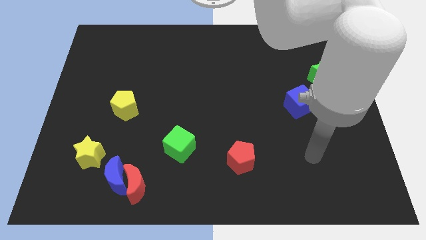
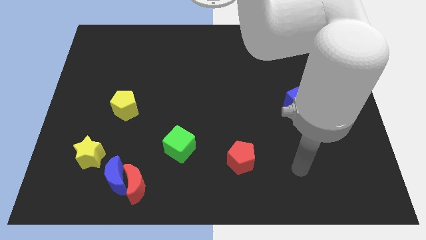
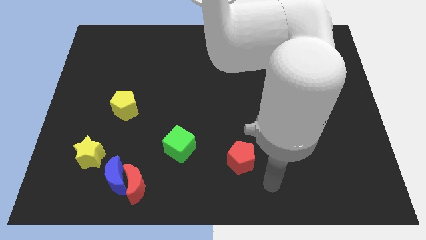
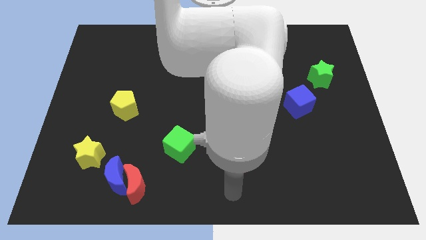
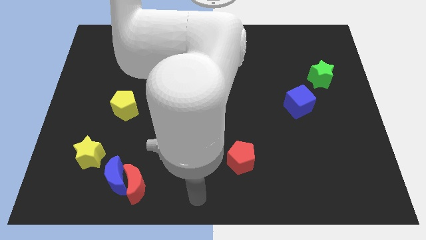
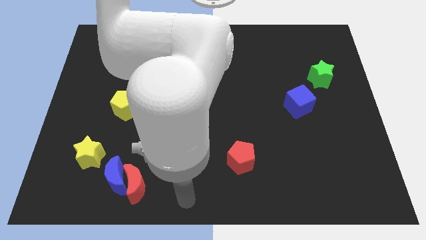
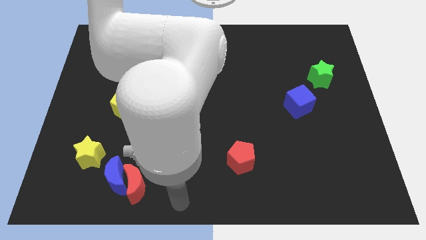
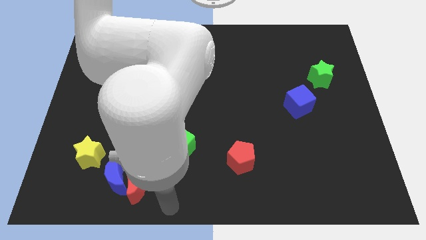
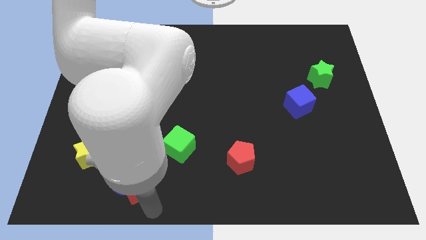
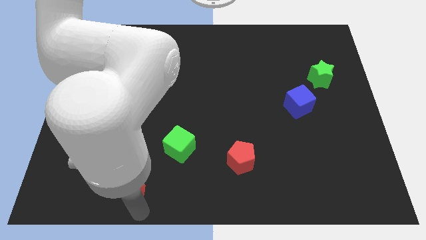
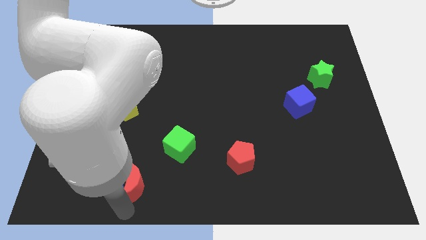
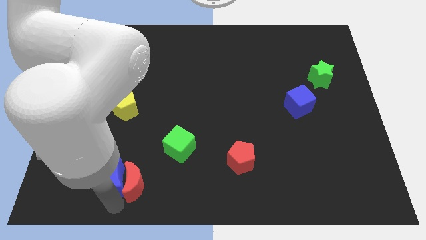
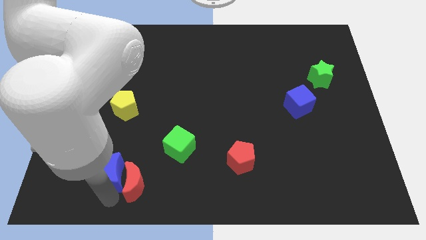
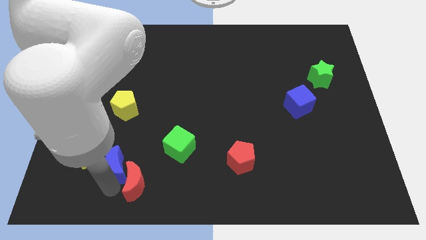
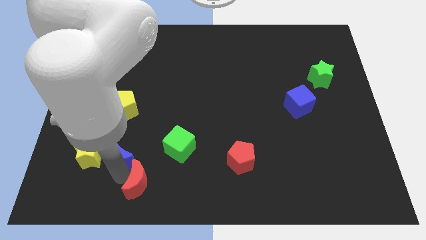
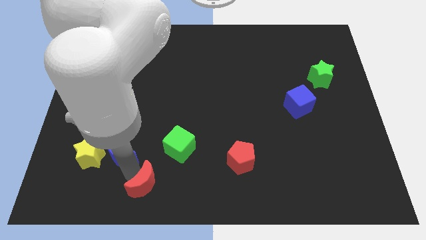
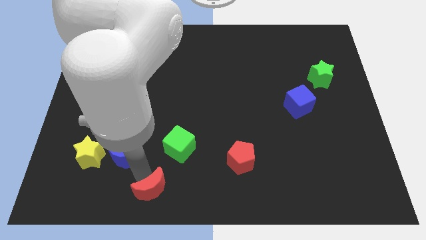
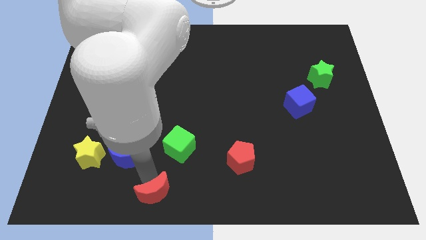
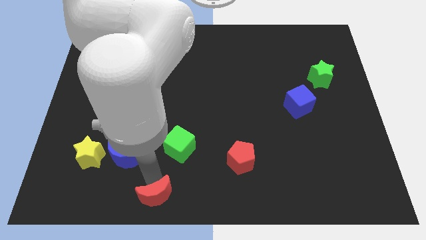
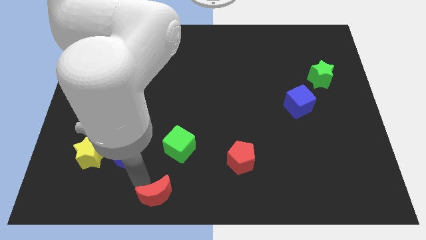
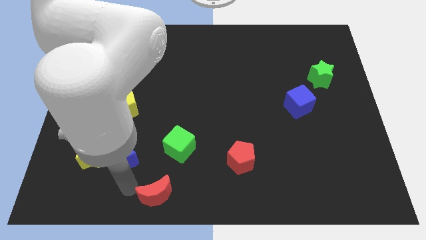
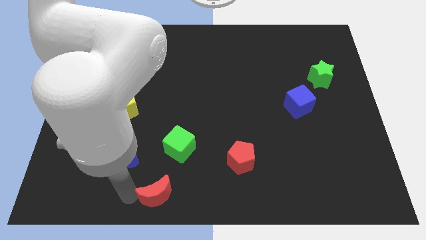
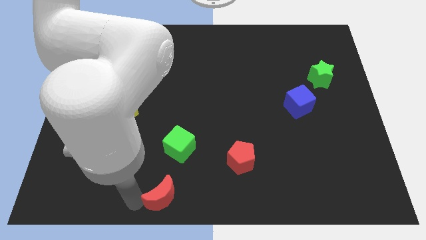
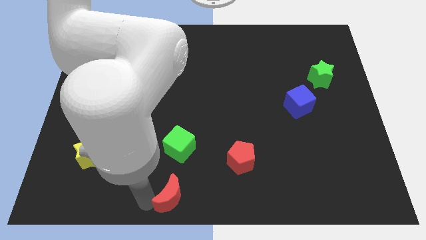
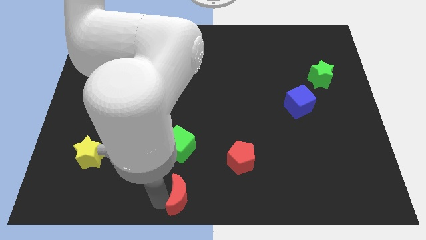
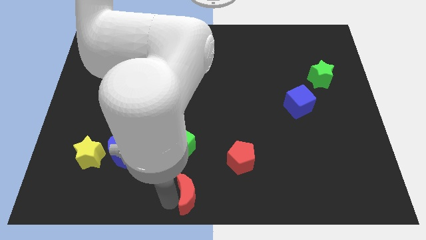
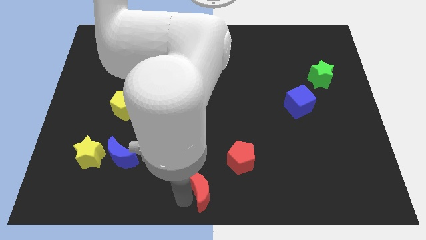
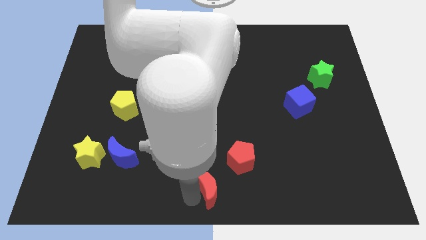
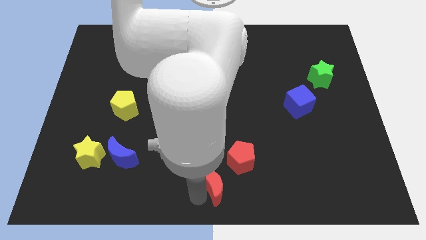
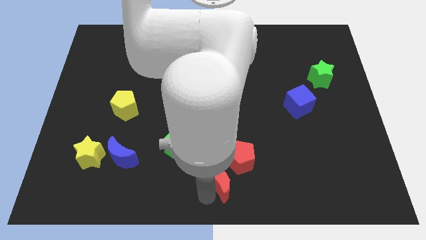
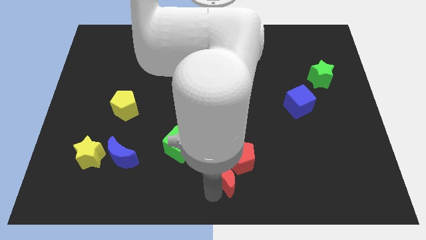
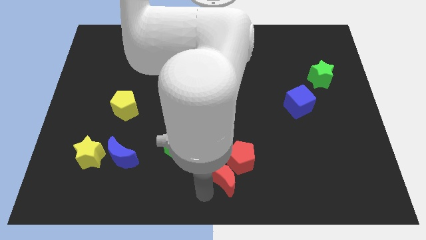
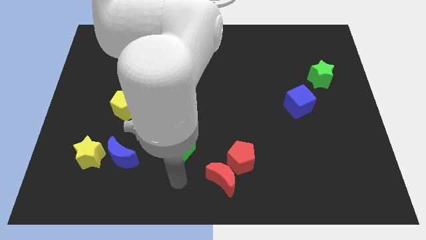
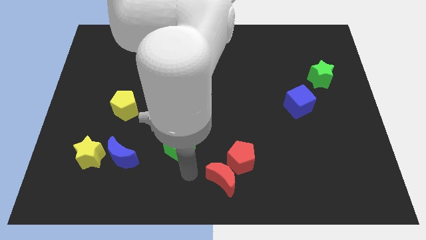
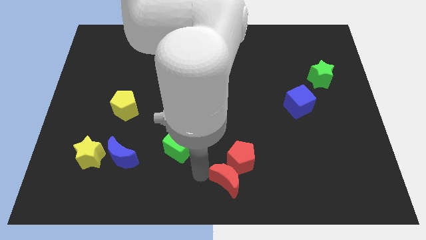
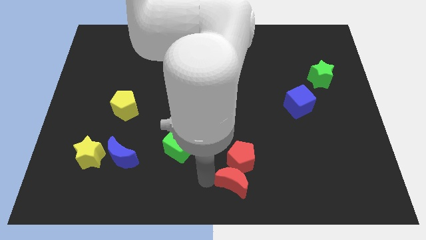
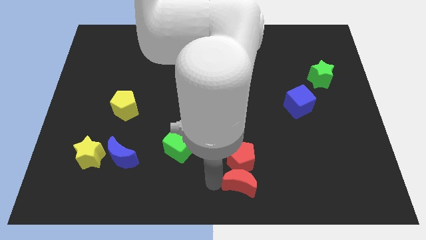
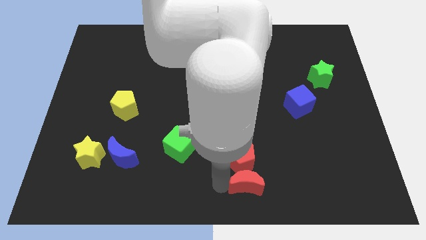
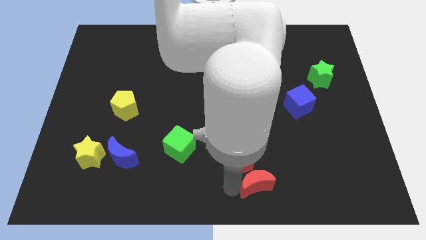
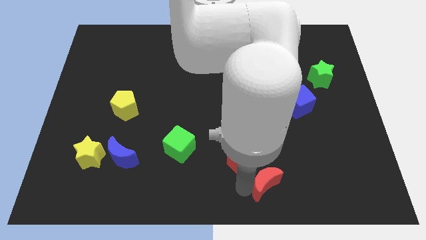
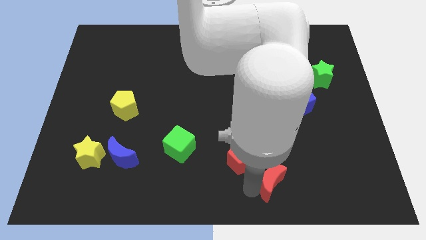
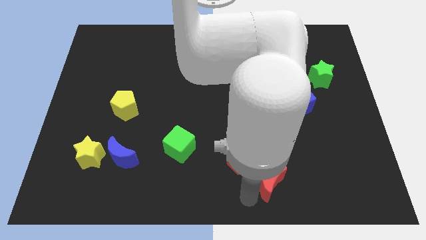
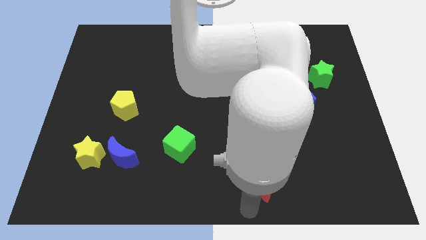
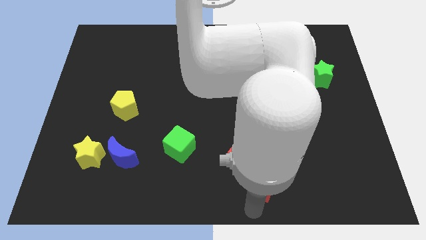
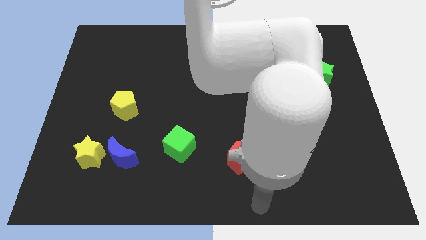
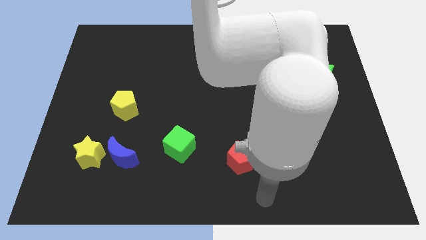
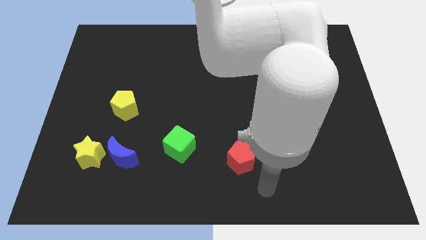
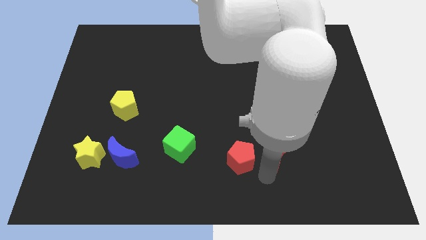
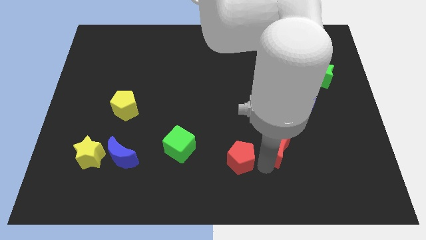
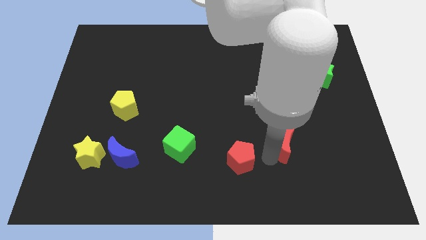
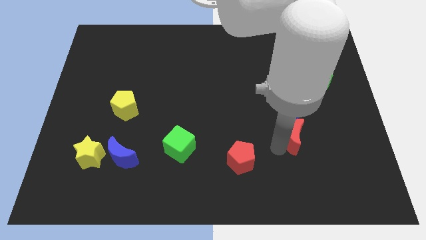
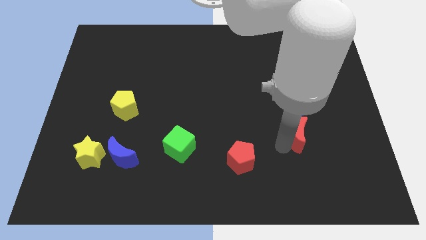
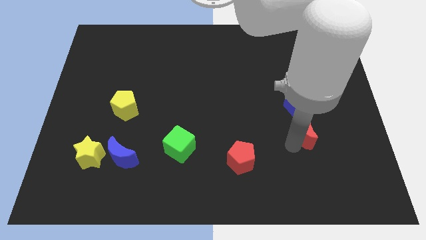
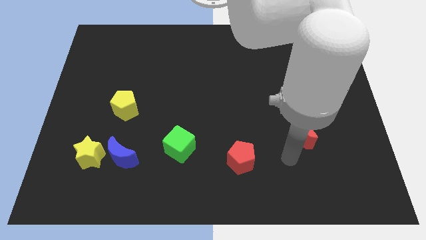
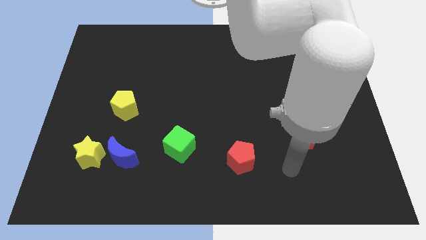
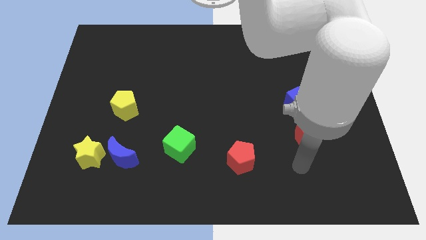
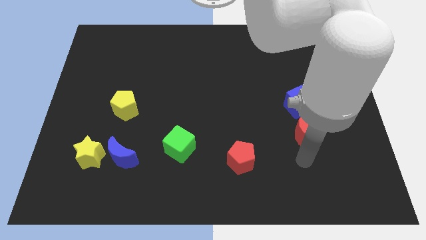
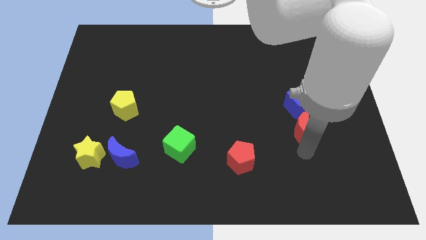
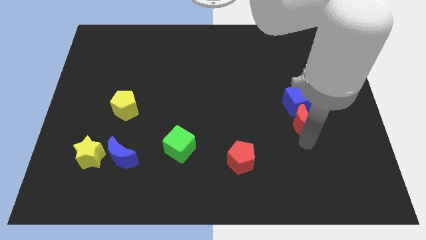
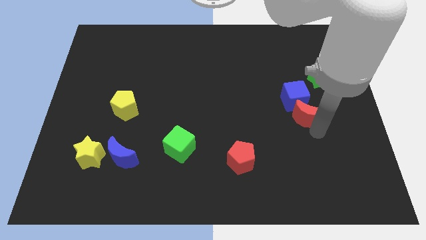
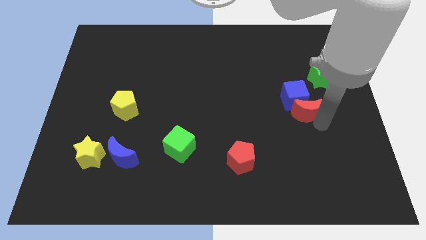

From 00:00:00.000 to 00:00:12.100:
move the red moon to the blue cube

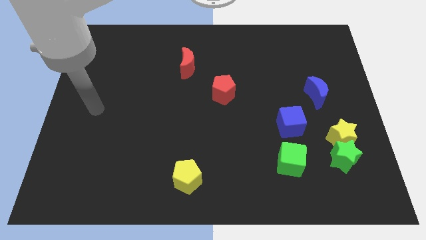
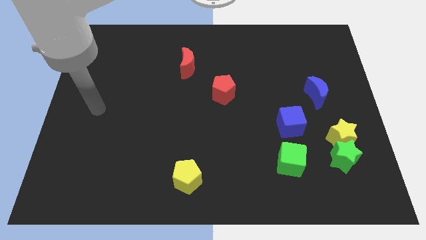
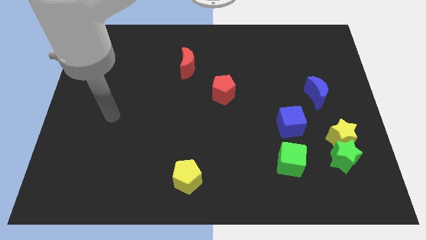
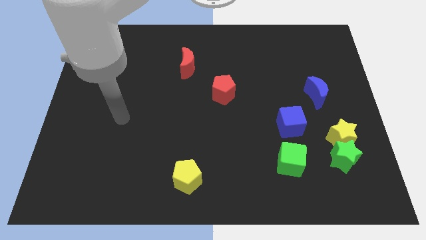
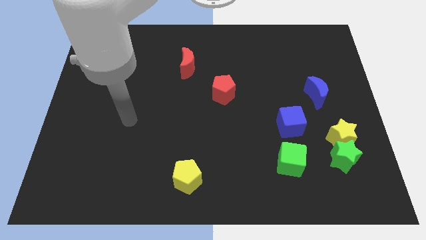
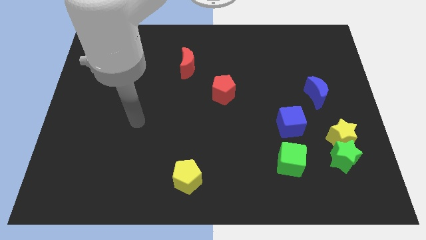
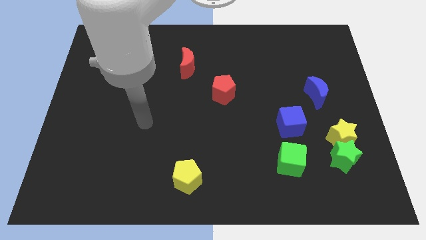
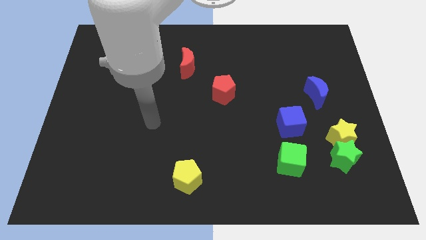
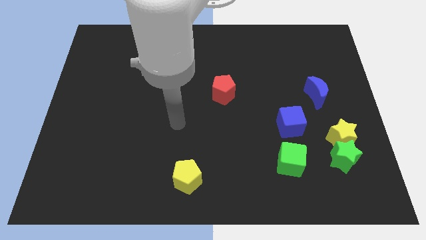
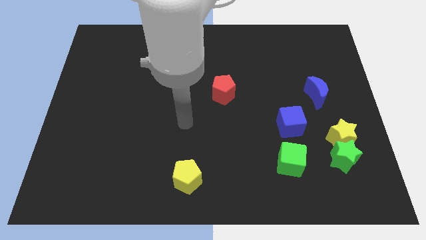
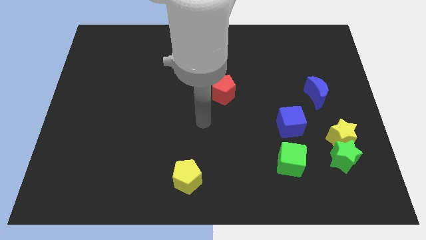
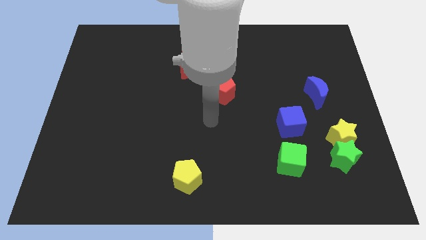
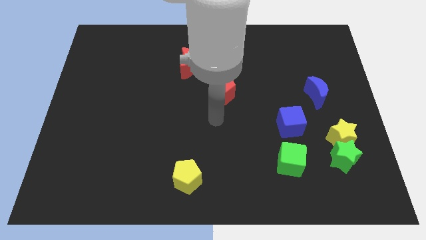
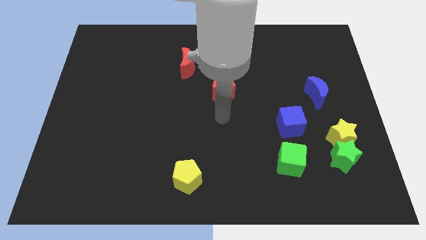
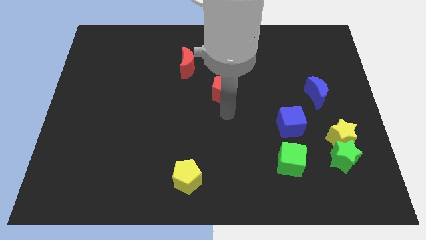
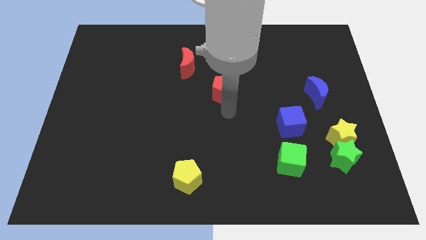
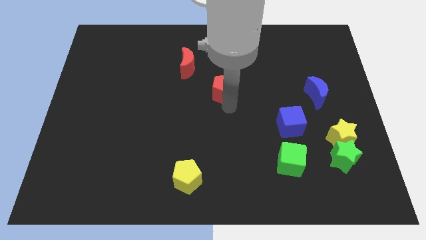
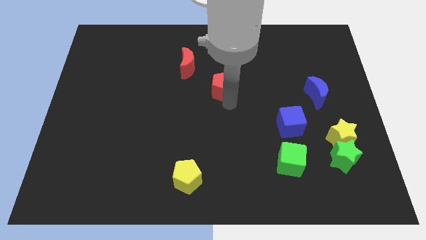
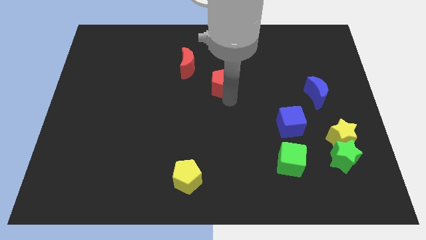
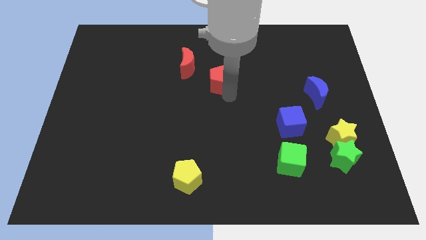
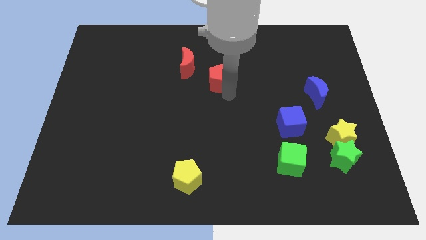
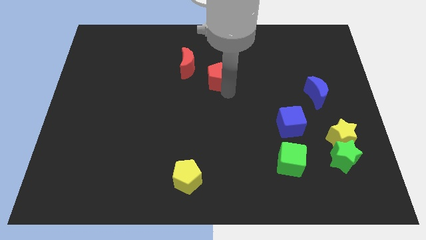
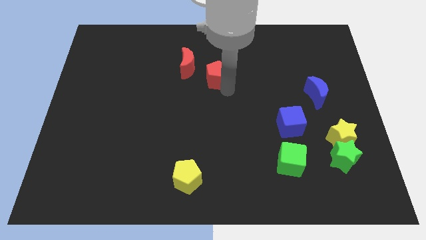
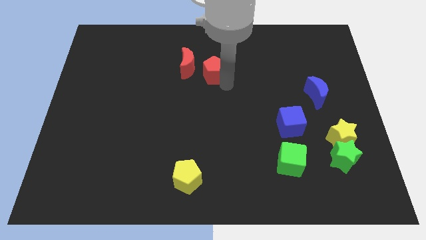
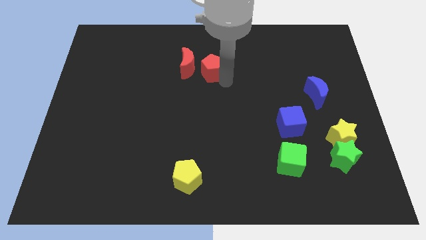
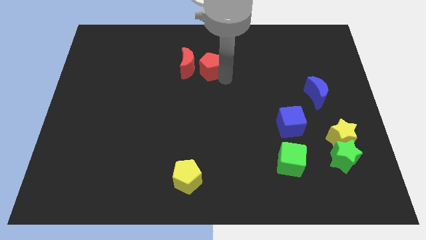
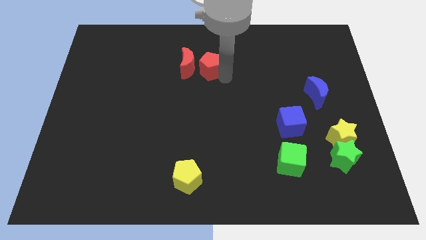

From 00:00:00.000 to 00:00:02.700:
slide the red pentagon next to the red moon

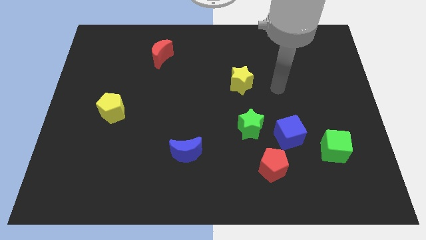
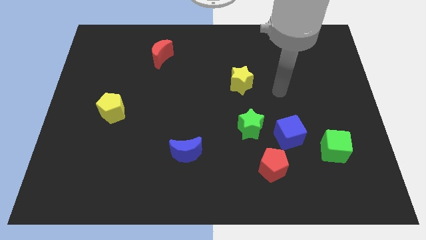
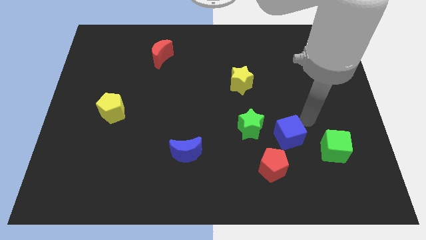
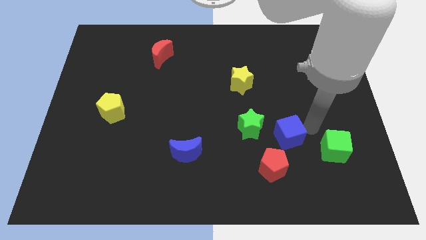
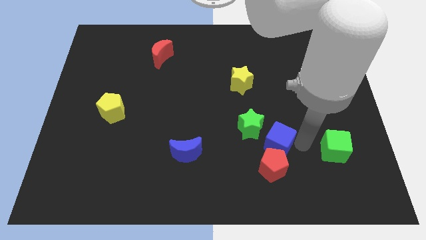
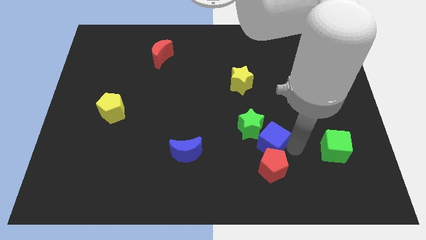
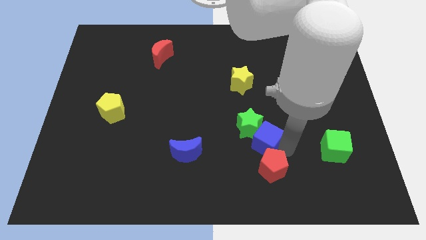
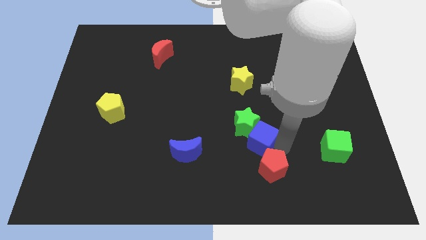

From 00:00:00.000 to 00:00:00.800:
slide the blue cube towards the green star
